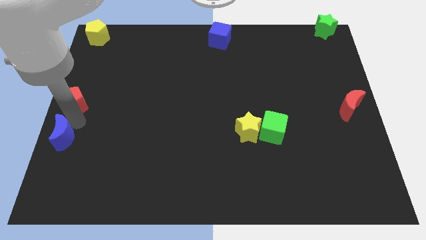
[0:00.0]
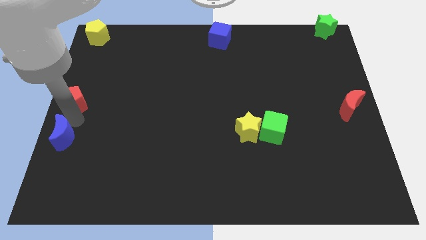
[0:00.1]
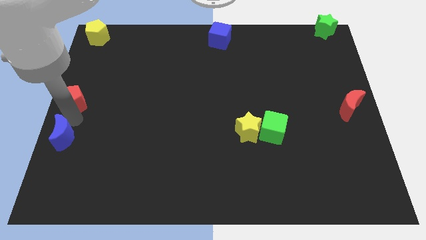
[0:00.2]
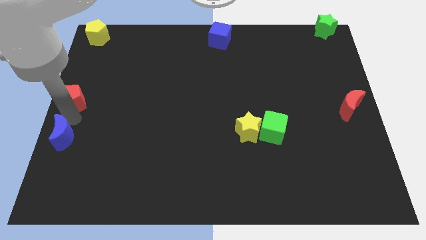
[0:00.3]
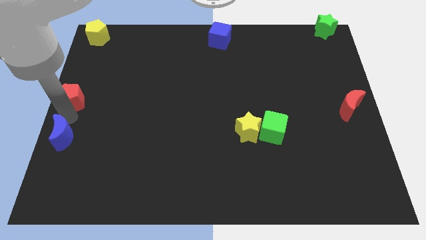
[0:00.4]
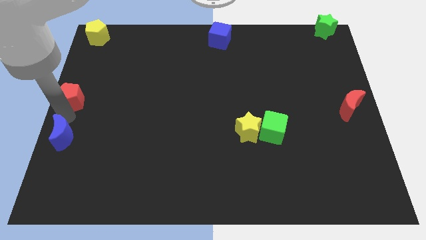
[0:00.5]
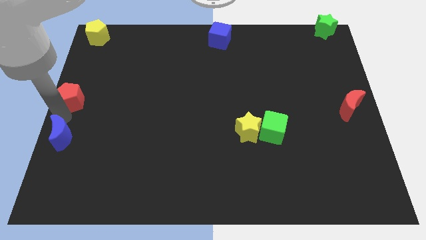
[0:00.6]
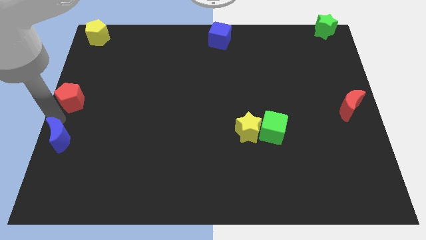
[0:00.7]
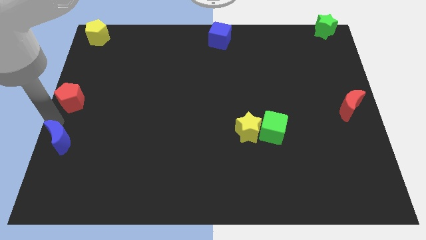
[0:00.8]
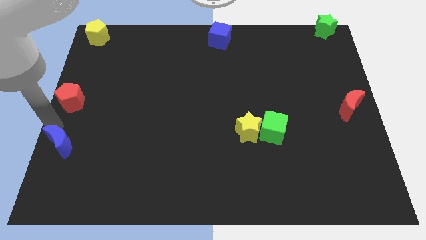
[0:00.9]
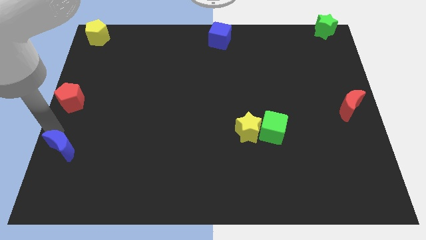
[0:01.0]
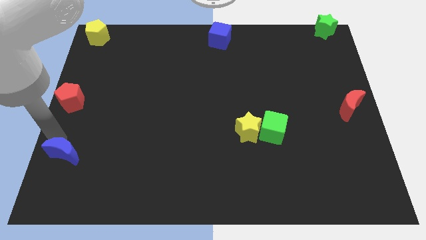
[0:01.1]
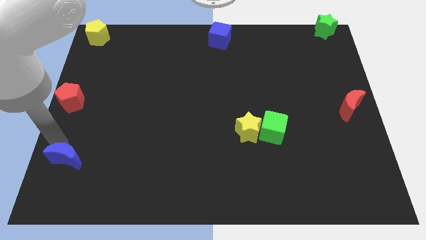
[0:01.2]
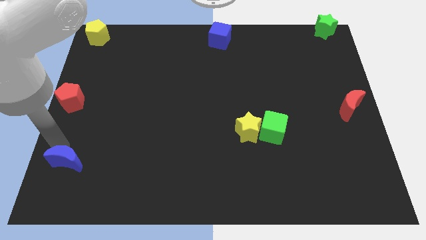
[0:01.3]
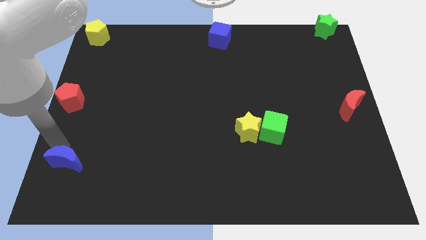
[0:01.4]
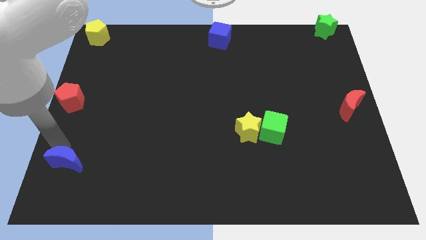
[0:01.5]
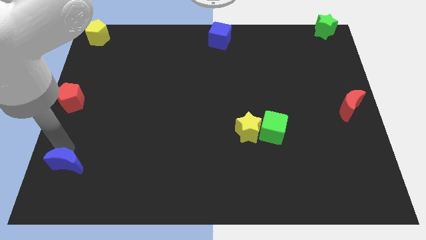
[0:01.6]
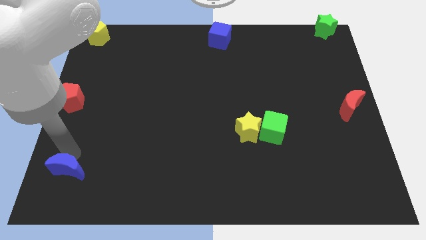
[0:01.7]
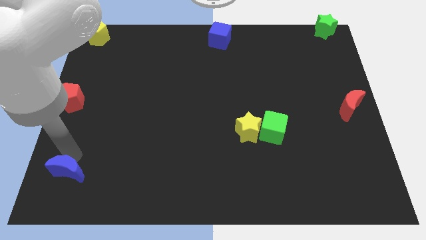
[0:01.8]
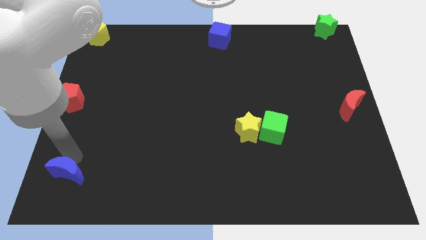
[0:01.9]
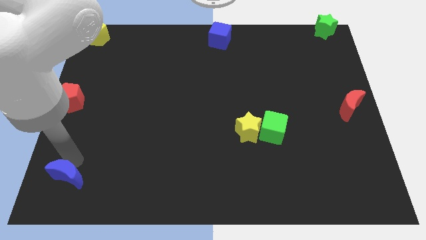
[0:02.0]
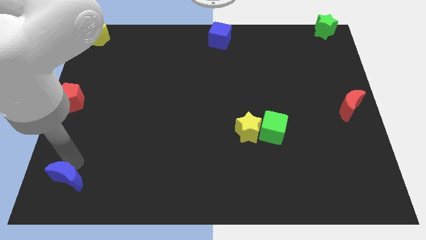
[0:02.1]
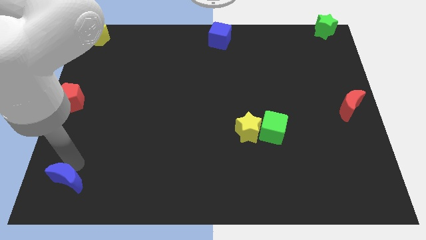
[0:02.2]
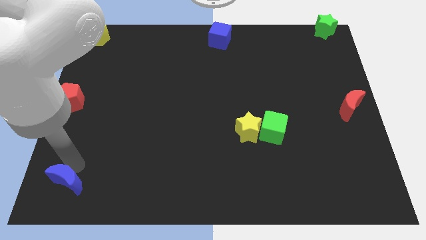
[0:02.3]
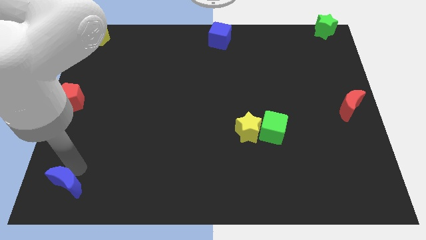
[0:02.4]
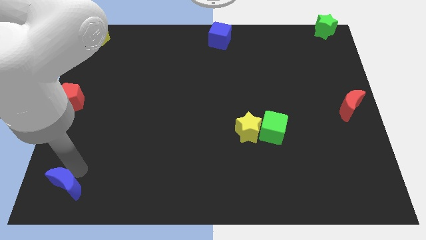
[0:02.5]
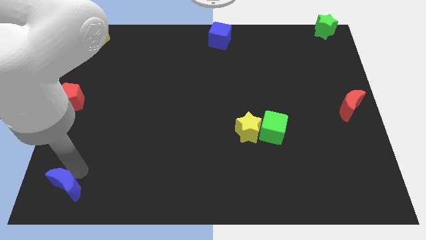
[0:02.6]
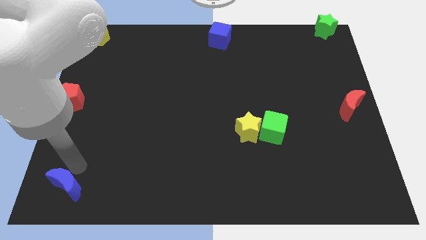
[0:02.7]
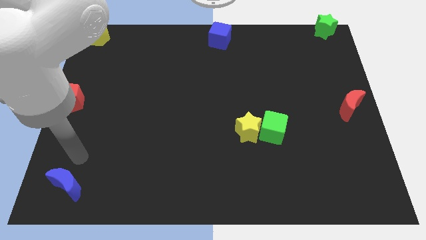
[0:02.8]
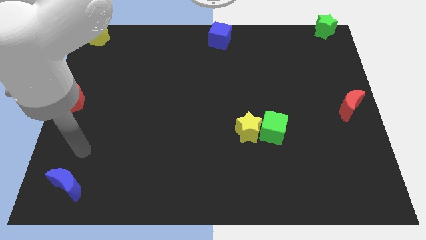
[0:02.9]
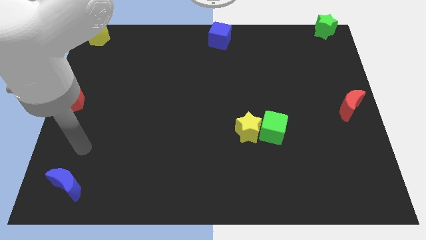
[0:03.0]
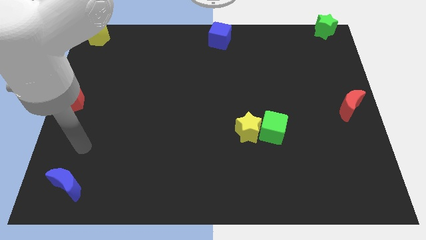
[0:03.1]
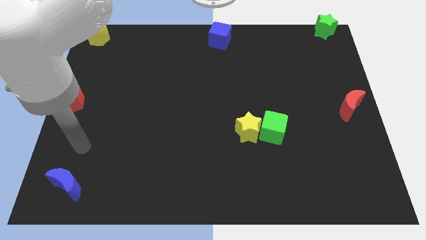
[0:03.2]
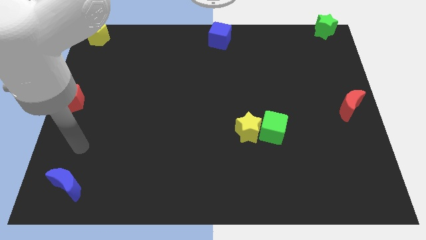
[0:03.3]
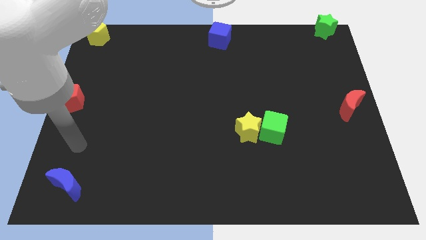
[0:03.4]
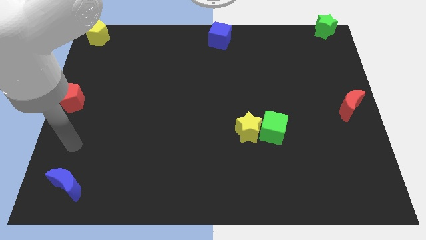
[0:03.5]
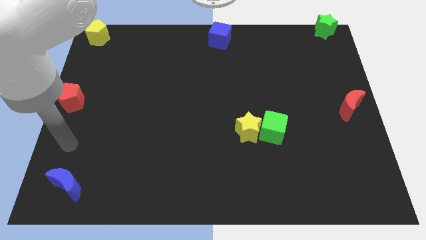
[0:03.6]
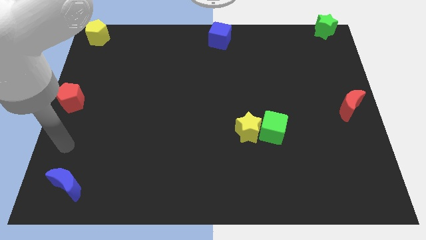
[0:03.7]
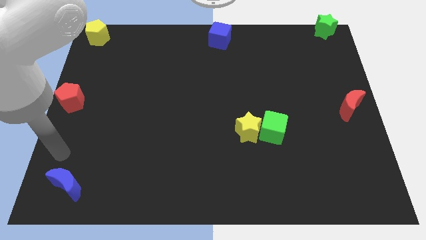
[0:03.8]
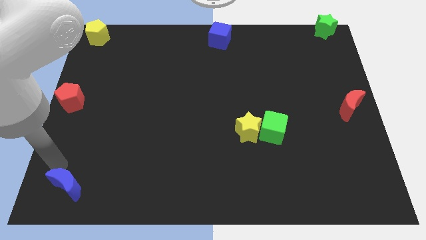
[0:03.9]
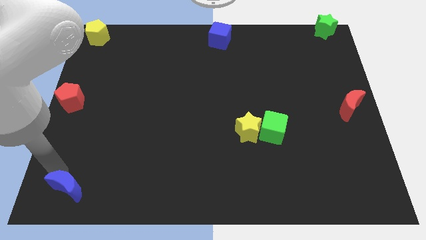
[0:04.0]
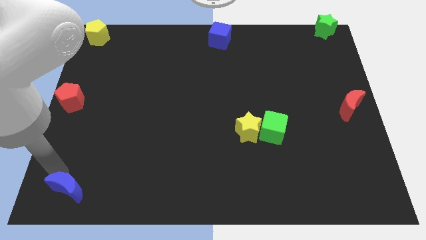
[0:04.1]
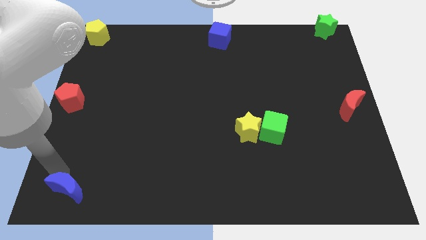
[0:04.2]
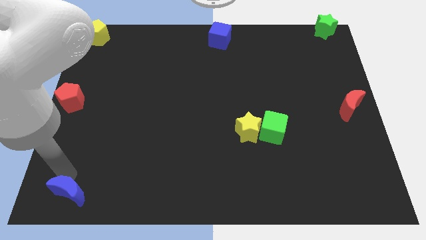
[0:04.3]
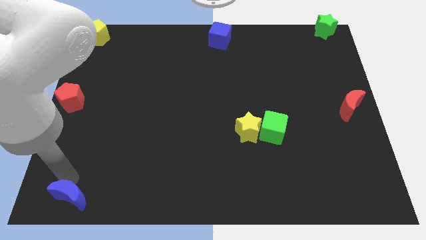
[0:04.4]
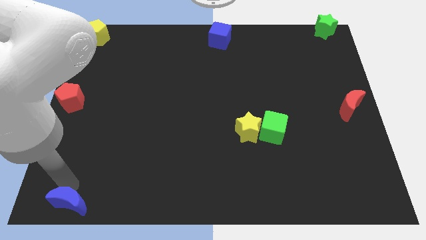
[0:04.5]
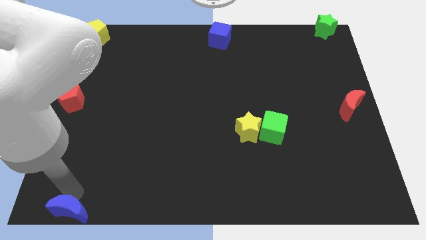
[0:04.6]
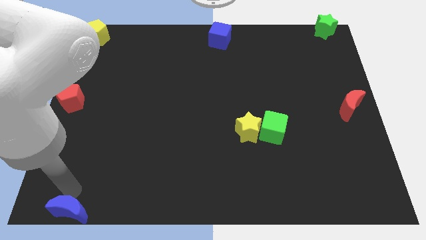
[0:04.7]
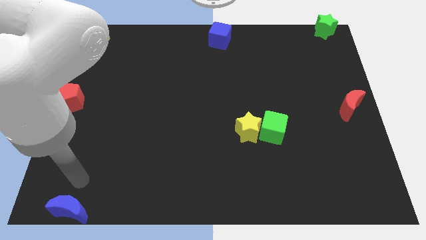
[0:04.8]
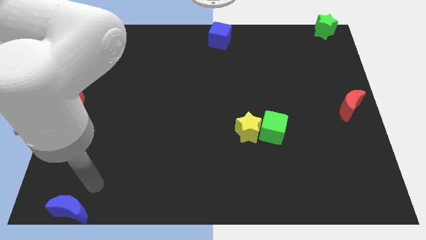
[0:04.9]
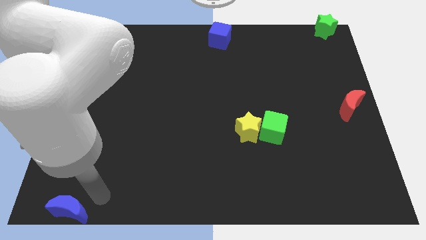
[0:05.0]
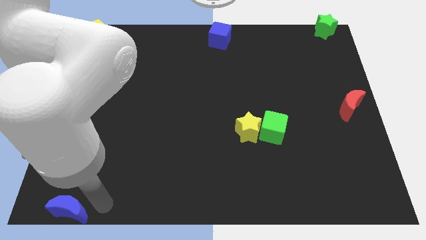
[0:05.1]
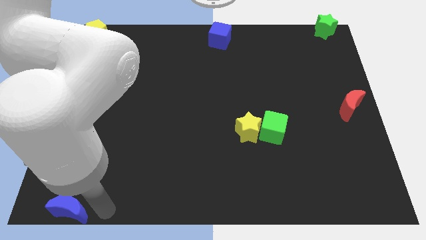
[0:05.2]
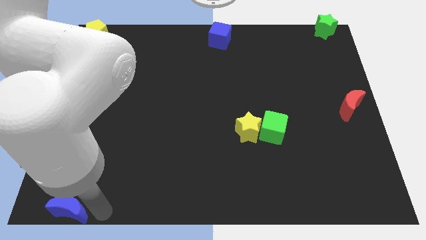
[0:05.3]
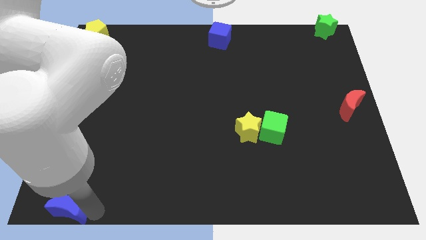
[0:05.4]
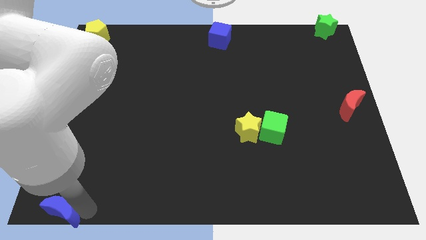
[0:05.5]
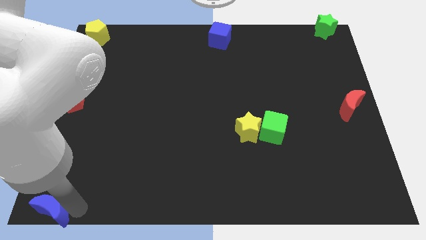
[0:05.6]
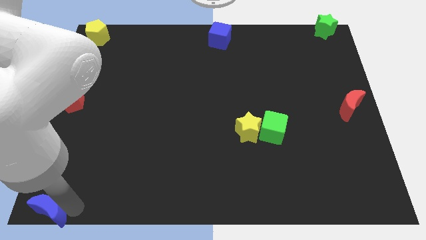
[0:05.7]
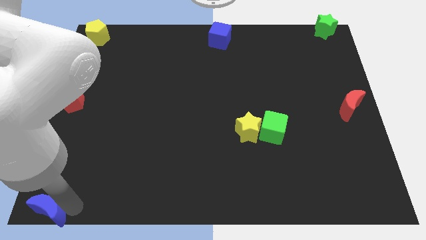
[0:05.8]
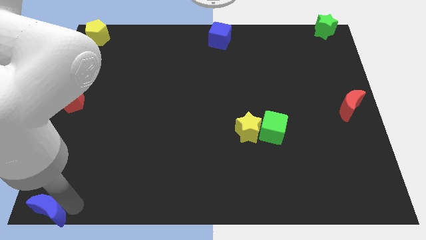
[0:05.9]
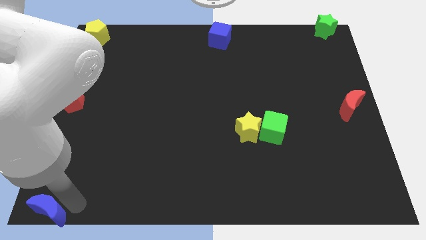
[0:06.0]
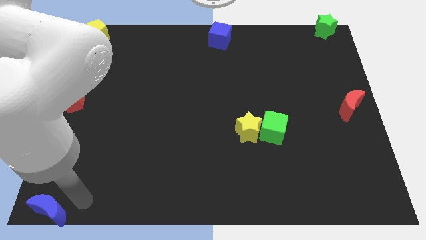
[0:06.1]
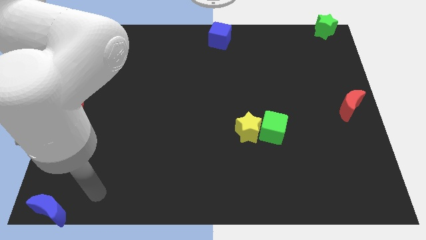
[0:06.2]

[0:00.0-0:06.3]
place blue crescent to the left bottom corner of the board

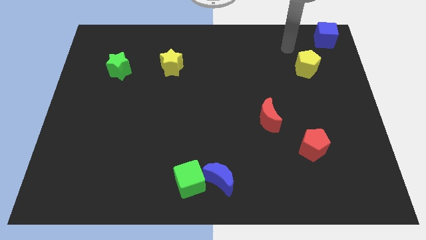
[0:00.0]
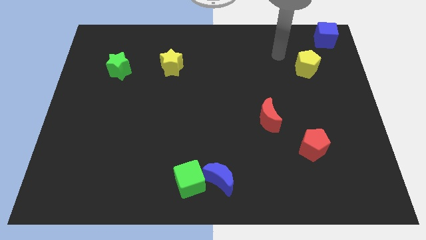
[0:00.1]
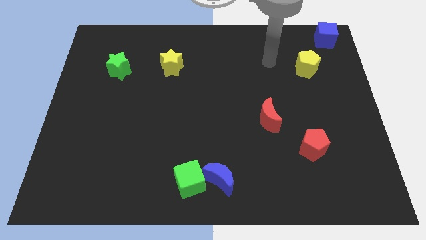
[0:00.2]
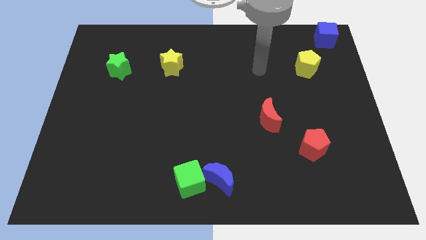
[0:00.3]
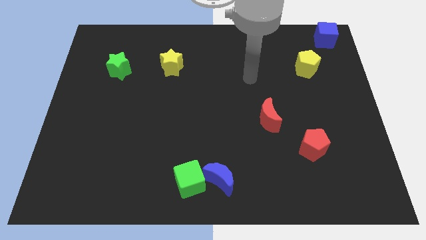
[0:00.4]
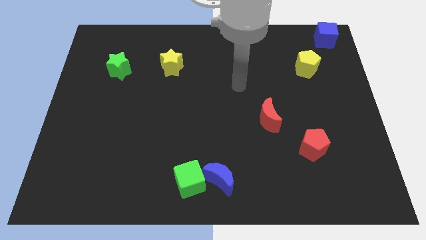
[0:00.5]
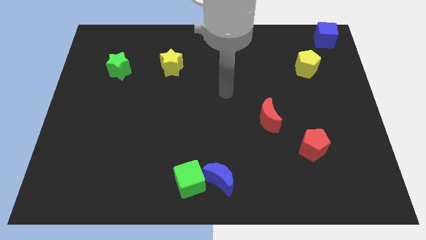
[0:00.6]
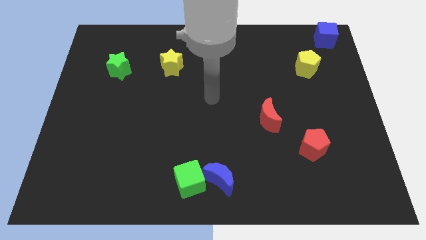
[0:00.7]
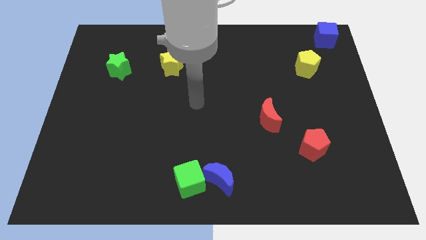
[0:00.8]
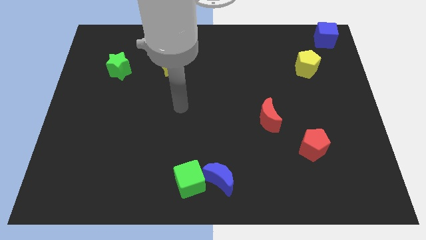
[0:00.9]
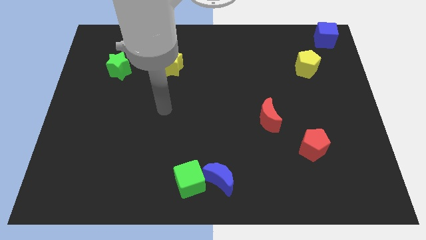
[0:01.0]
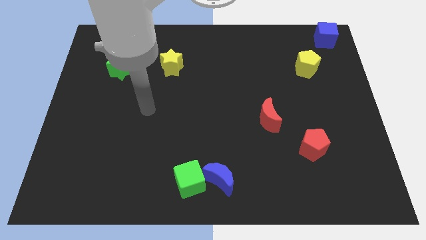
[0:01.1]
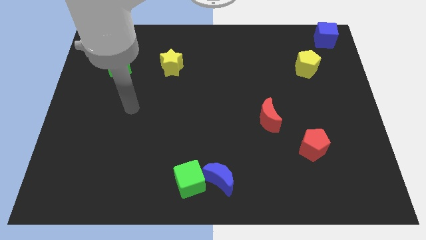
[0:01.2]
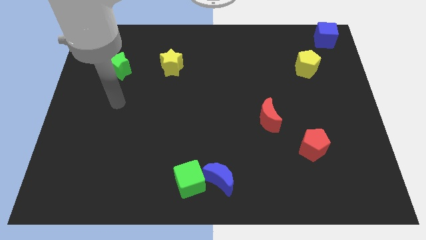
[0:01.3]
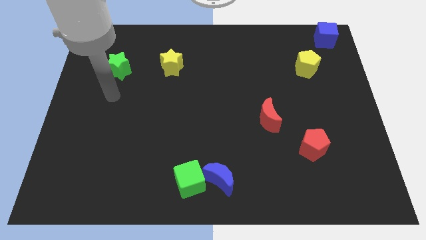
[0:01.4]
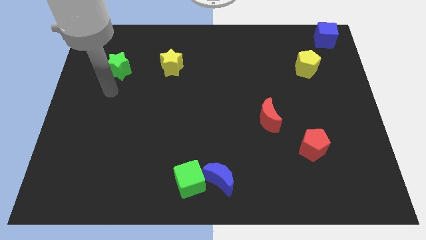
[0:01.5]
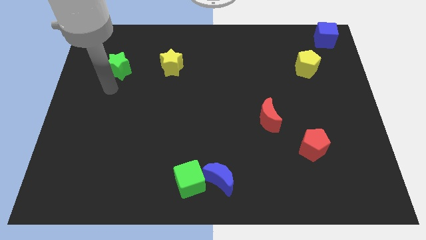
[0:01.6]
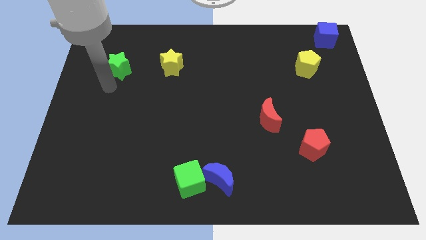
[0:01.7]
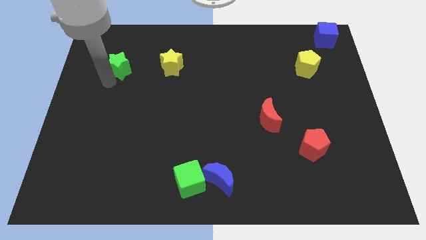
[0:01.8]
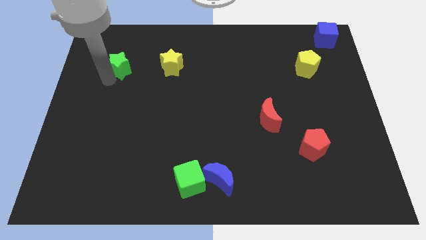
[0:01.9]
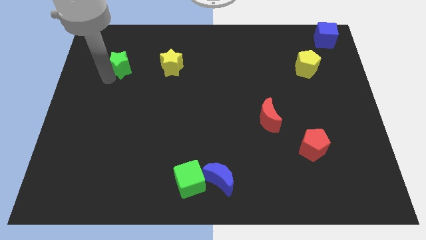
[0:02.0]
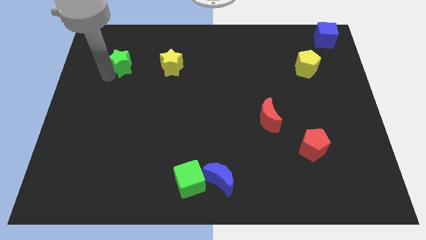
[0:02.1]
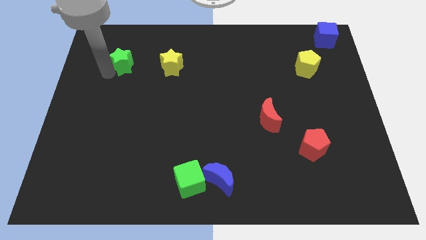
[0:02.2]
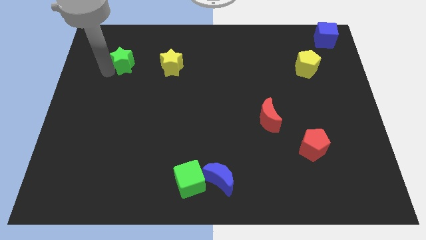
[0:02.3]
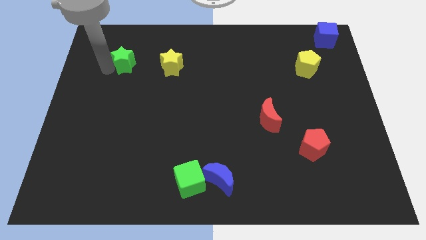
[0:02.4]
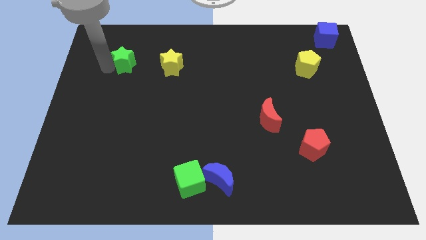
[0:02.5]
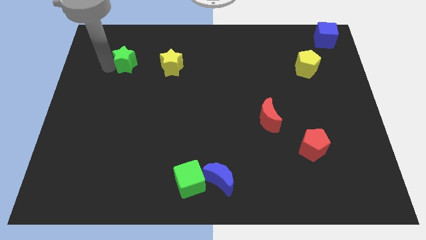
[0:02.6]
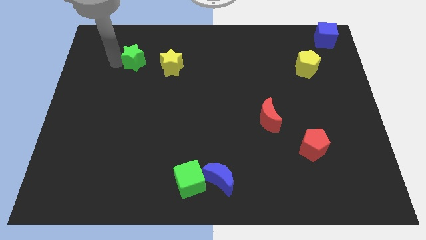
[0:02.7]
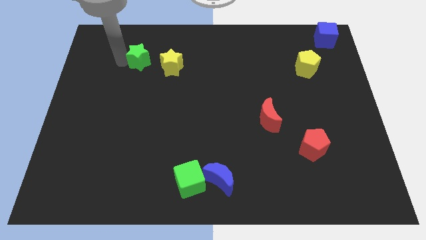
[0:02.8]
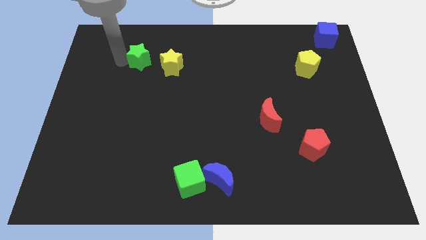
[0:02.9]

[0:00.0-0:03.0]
slightly move the green star to the right side
